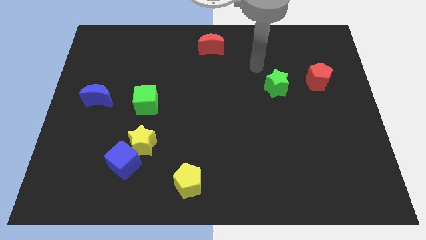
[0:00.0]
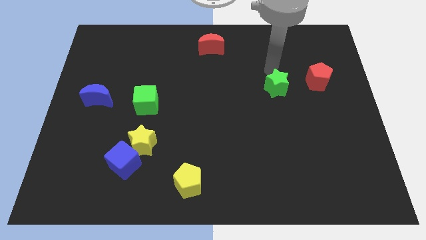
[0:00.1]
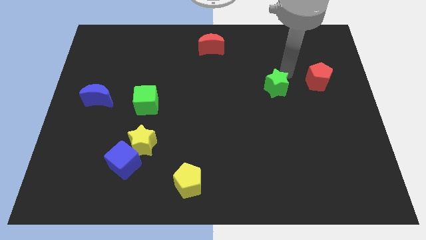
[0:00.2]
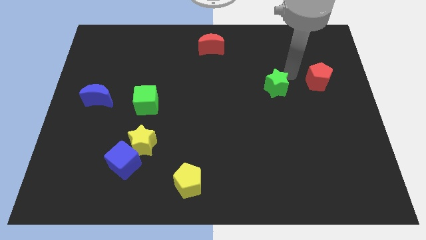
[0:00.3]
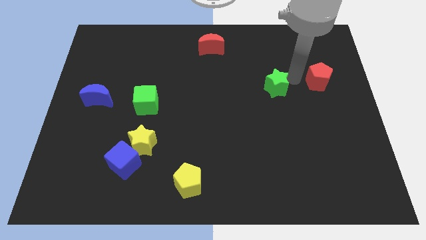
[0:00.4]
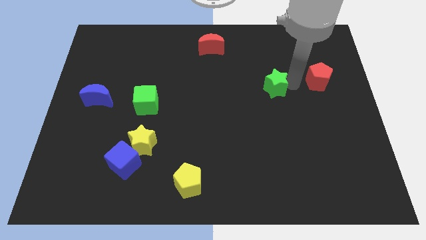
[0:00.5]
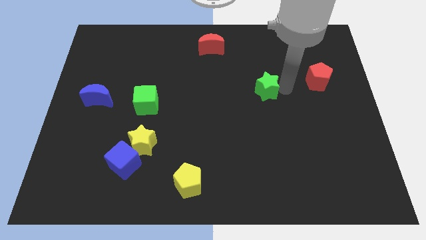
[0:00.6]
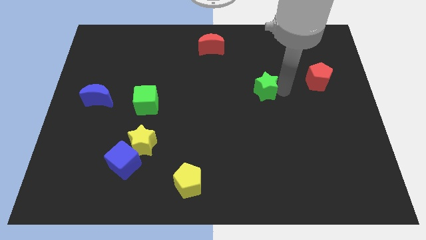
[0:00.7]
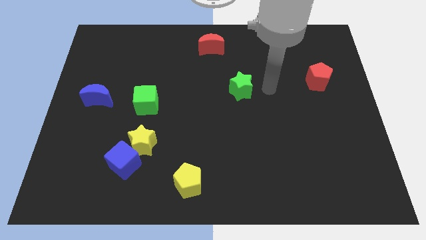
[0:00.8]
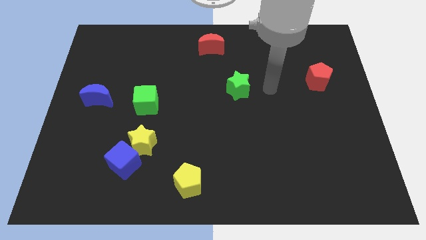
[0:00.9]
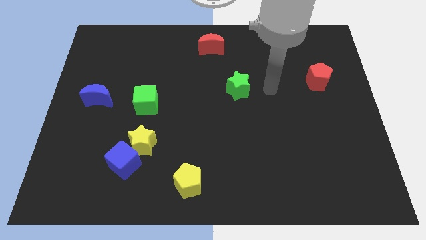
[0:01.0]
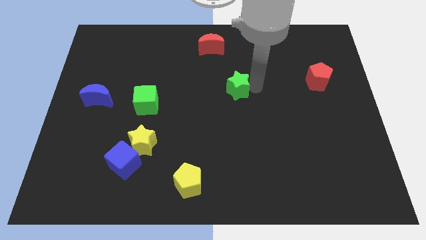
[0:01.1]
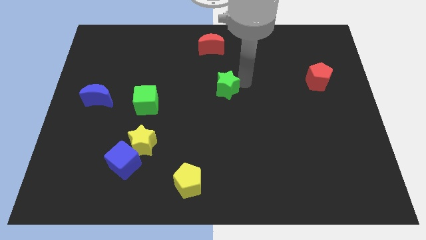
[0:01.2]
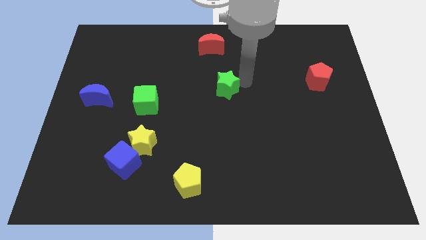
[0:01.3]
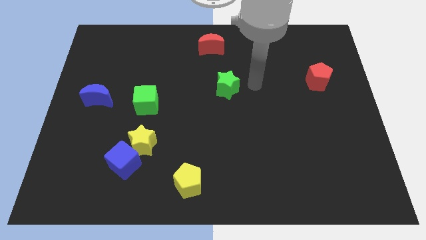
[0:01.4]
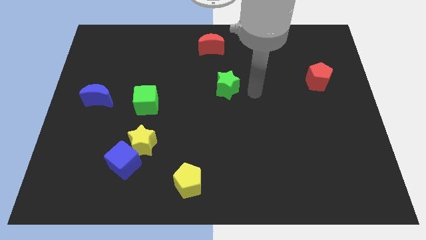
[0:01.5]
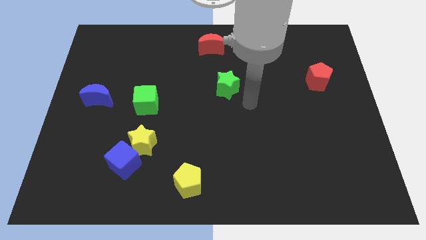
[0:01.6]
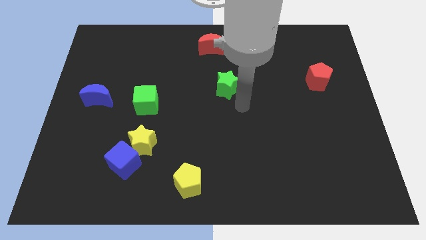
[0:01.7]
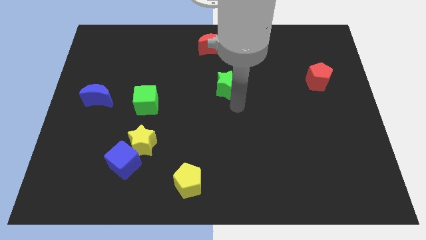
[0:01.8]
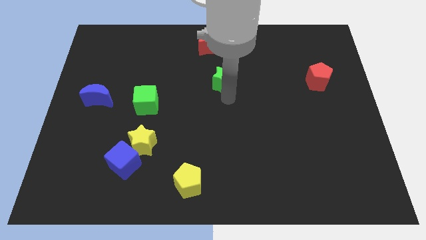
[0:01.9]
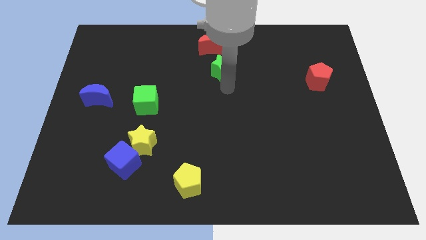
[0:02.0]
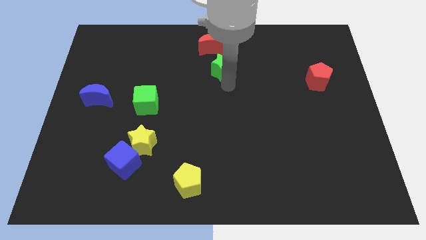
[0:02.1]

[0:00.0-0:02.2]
move the green star to the bottom of the red crescent

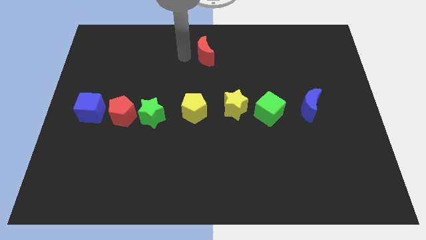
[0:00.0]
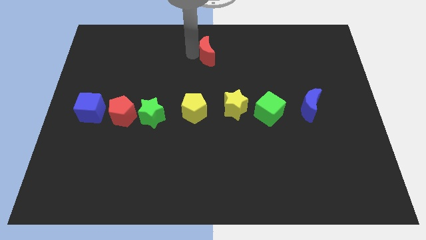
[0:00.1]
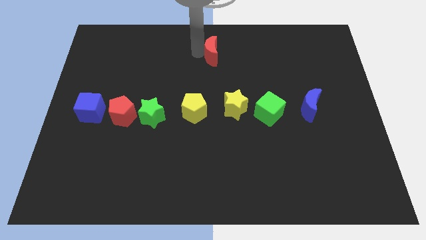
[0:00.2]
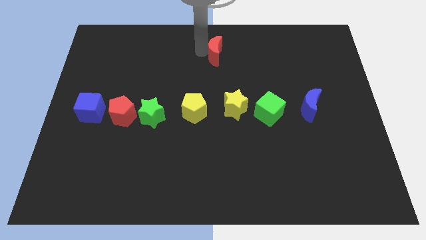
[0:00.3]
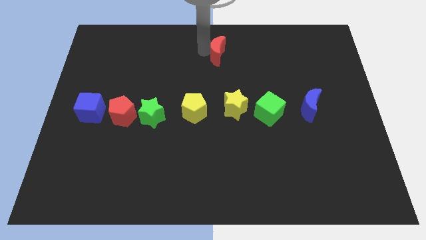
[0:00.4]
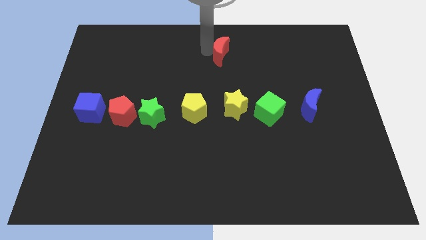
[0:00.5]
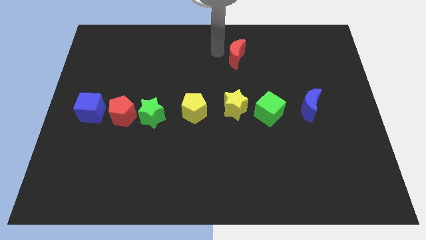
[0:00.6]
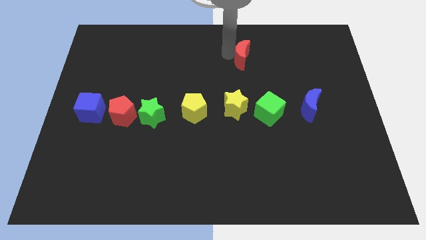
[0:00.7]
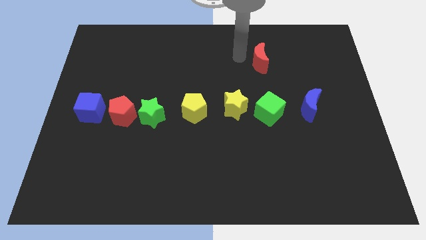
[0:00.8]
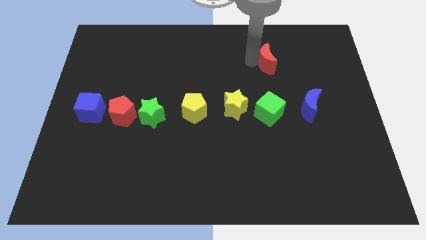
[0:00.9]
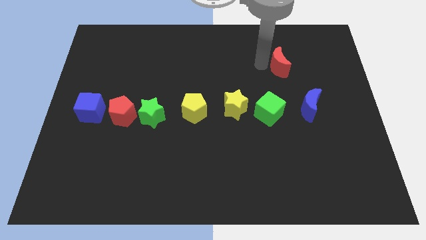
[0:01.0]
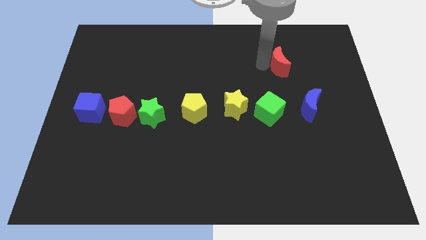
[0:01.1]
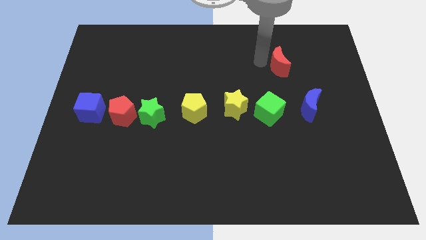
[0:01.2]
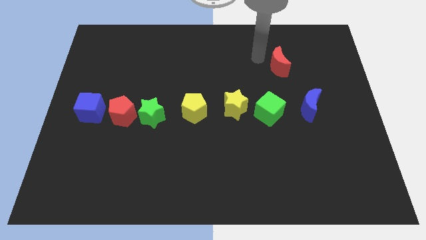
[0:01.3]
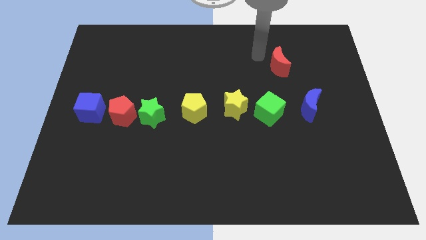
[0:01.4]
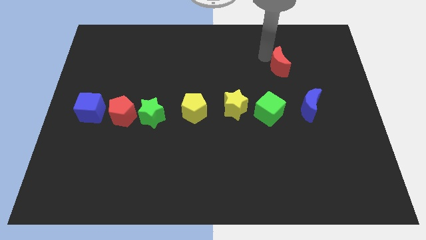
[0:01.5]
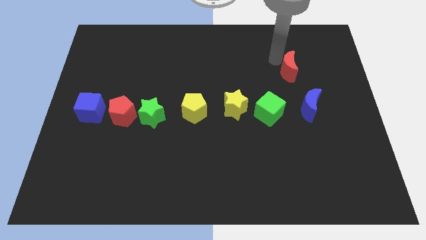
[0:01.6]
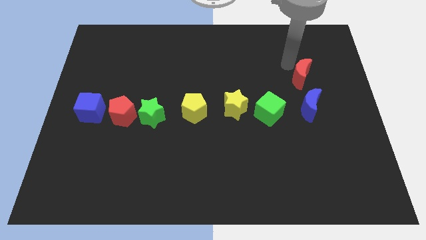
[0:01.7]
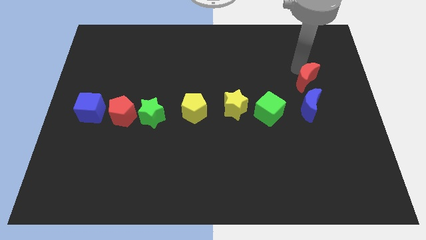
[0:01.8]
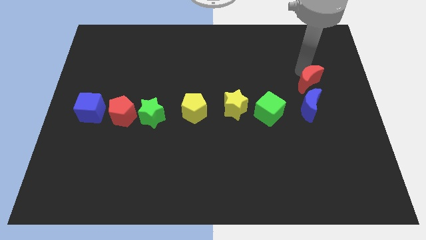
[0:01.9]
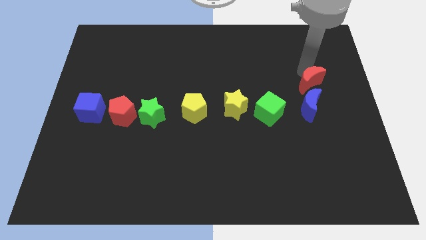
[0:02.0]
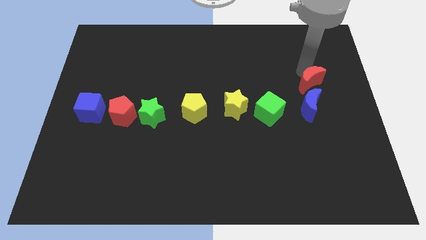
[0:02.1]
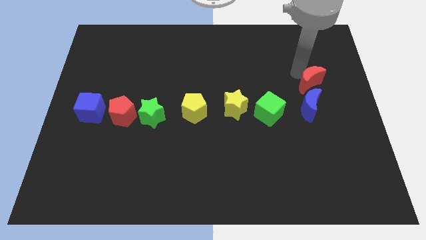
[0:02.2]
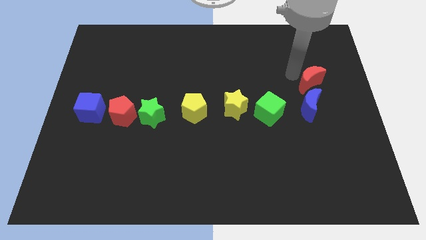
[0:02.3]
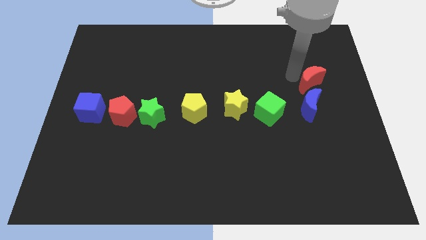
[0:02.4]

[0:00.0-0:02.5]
move the red moon above the blue moon

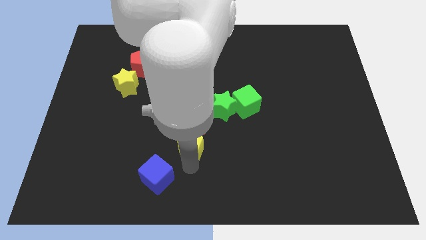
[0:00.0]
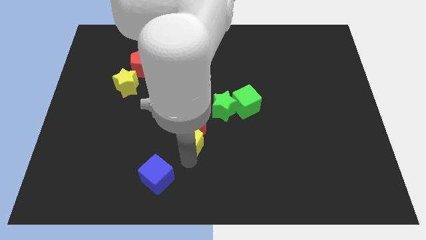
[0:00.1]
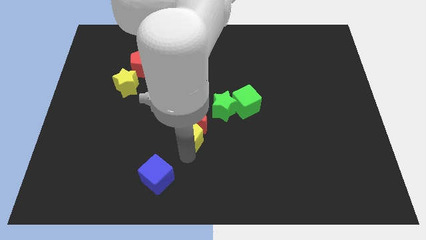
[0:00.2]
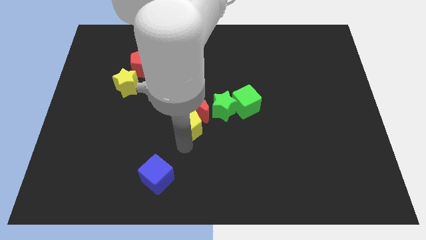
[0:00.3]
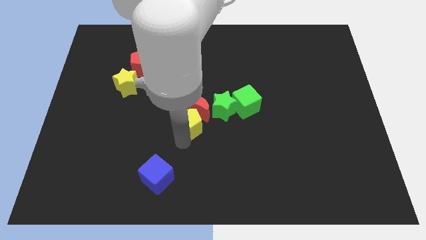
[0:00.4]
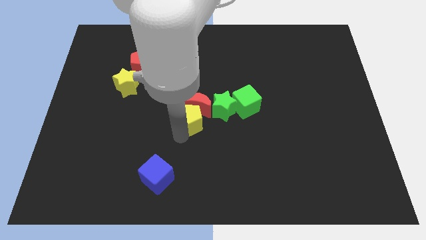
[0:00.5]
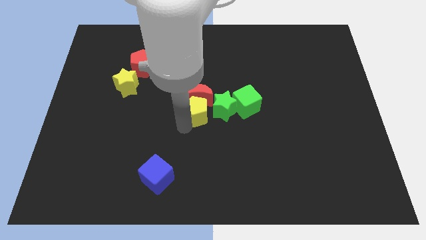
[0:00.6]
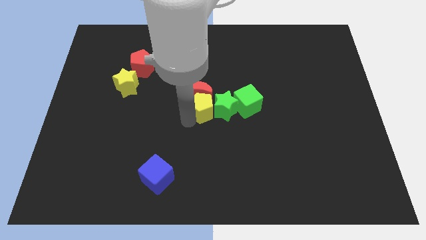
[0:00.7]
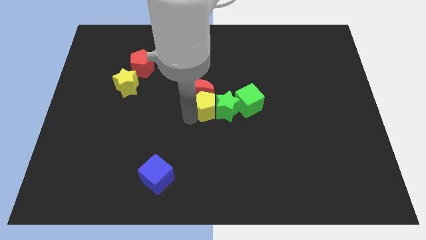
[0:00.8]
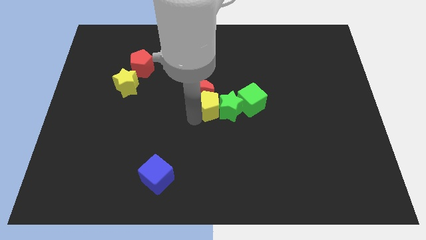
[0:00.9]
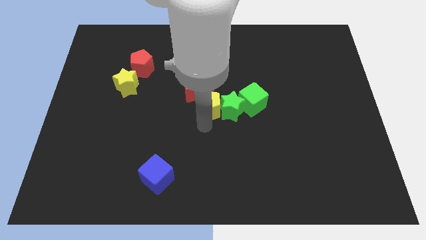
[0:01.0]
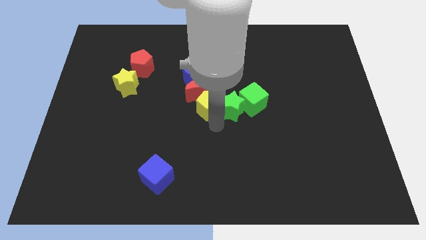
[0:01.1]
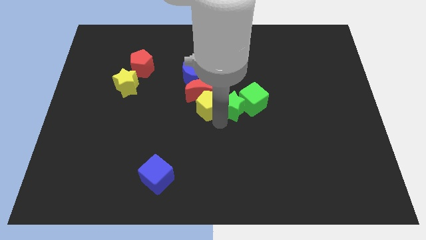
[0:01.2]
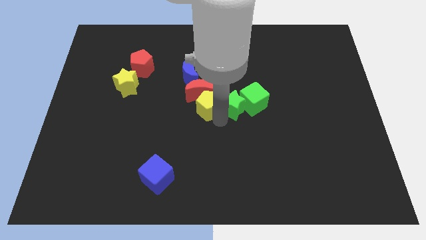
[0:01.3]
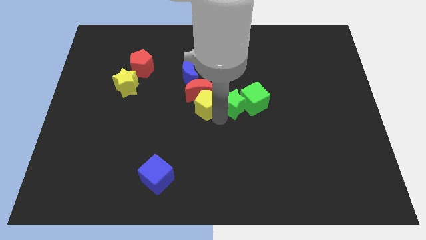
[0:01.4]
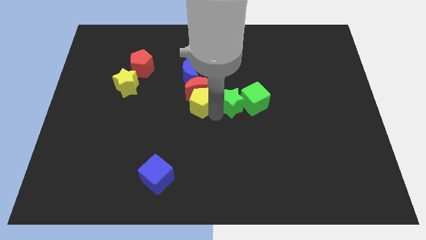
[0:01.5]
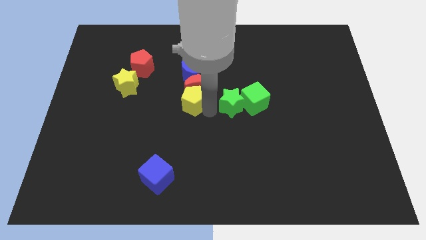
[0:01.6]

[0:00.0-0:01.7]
move yellow pentagon into the red moon

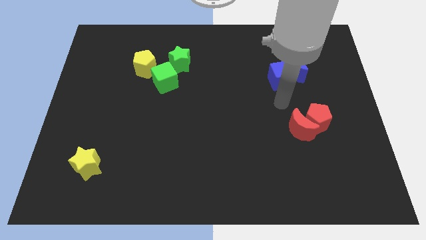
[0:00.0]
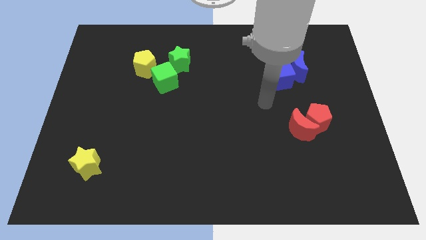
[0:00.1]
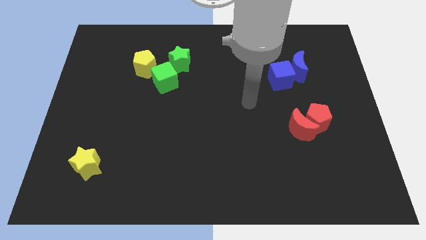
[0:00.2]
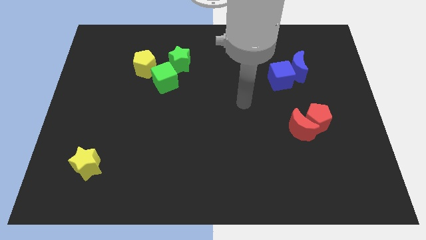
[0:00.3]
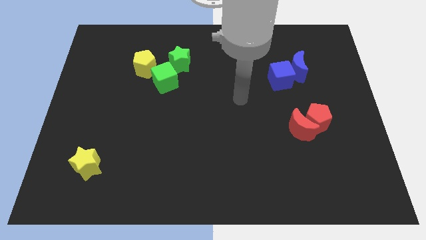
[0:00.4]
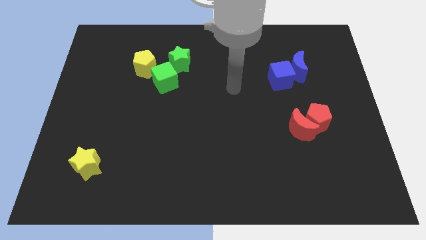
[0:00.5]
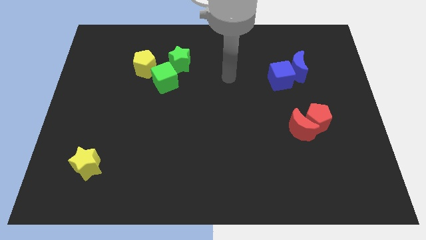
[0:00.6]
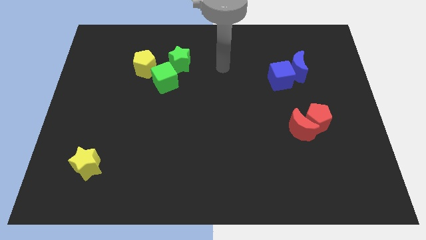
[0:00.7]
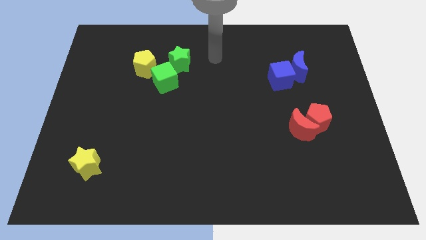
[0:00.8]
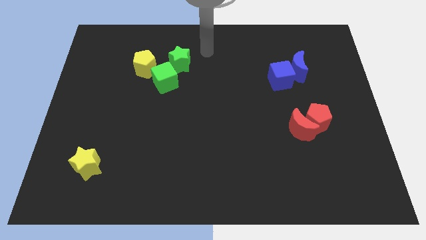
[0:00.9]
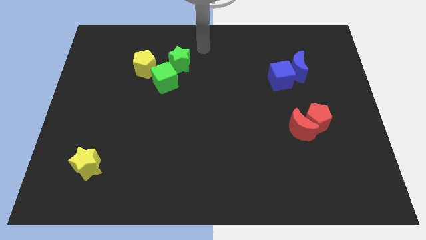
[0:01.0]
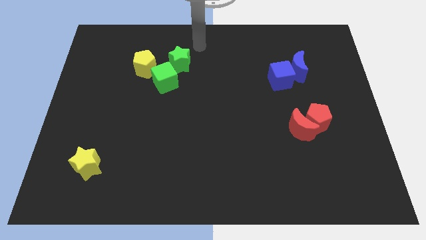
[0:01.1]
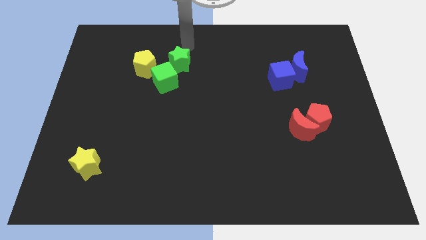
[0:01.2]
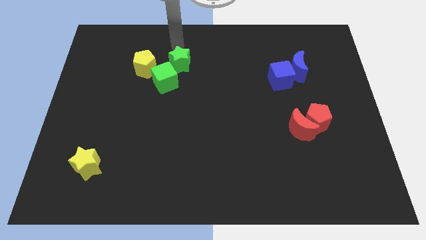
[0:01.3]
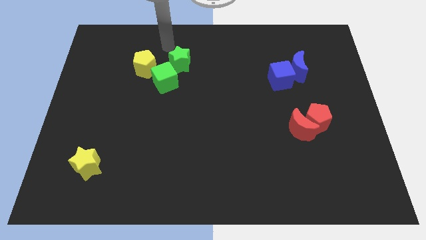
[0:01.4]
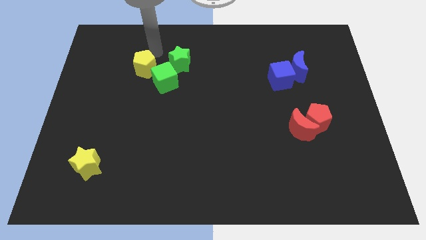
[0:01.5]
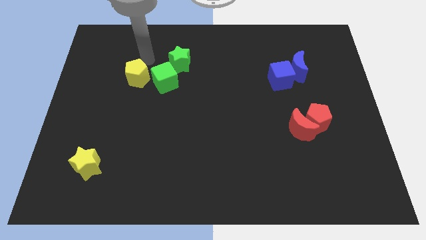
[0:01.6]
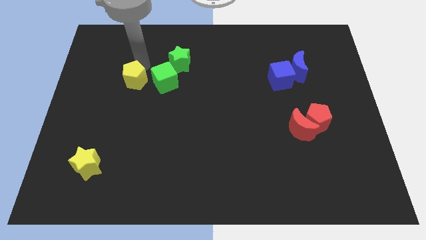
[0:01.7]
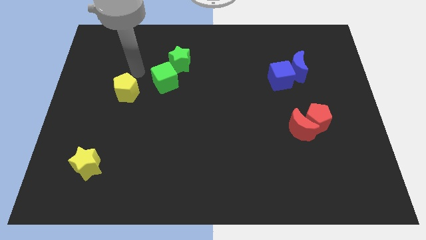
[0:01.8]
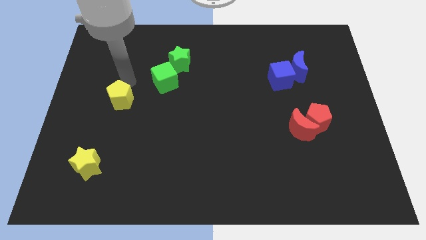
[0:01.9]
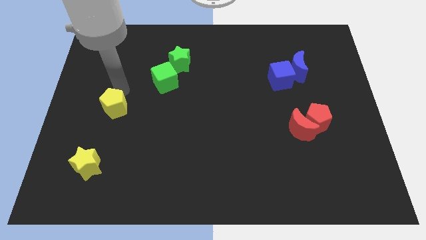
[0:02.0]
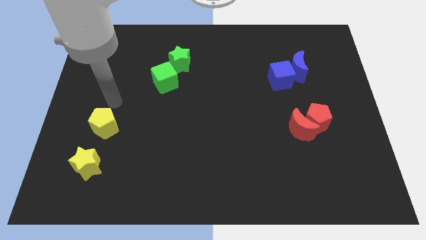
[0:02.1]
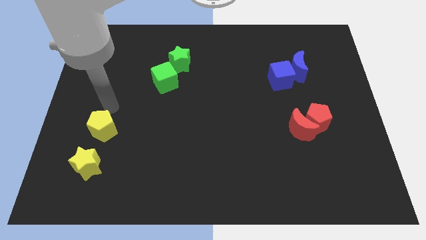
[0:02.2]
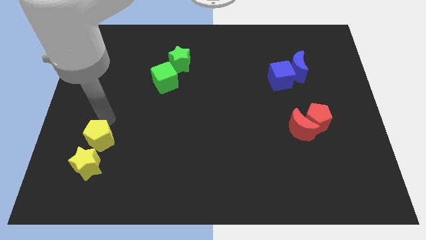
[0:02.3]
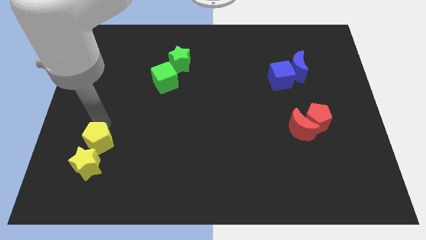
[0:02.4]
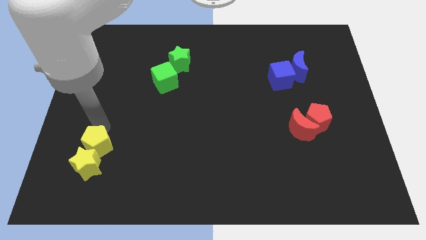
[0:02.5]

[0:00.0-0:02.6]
place the yellow pentagon at the top of yellow star
